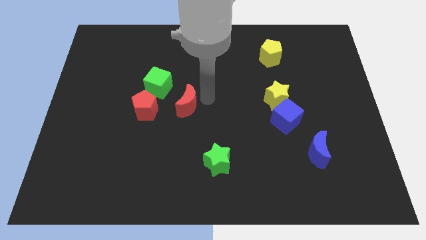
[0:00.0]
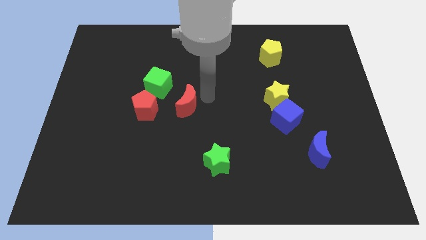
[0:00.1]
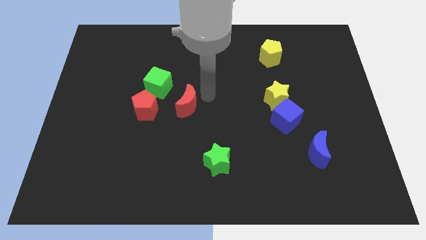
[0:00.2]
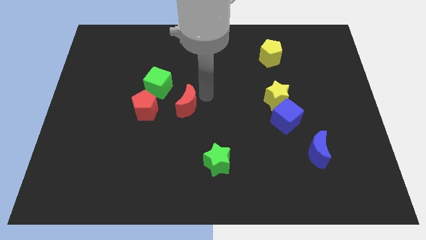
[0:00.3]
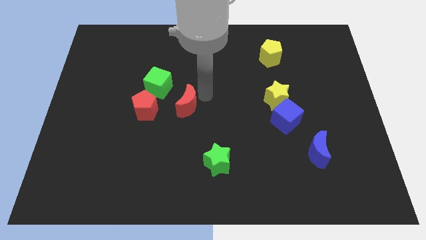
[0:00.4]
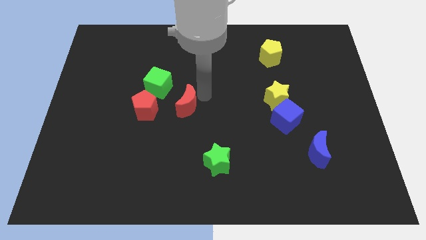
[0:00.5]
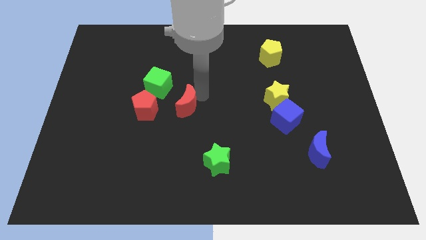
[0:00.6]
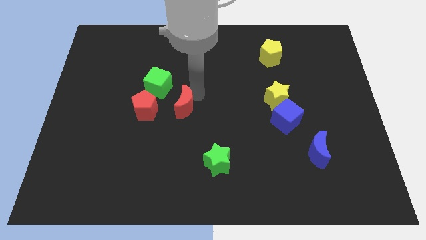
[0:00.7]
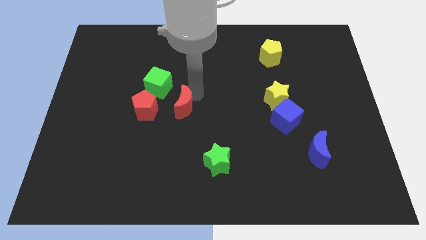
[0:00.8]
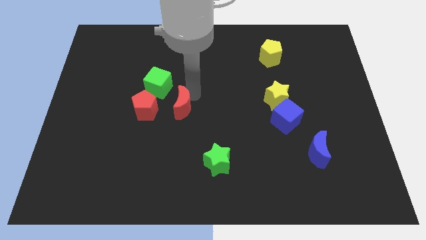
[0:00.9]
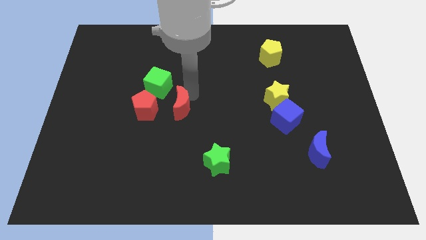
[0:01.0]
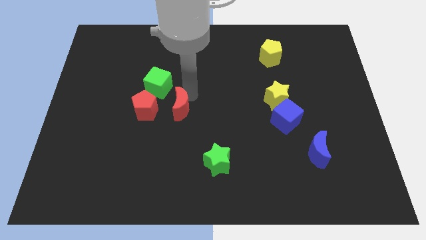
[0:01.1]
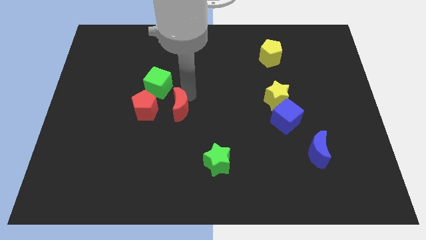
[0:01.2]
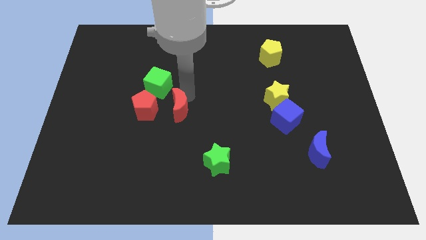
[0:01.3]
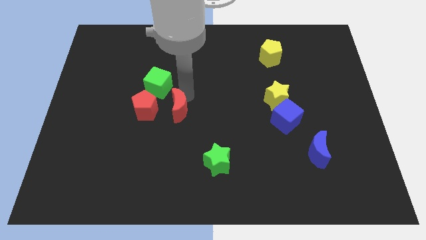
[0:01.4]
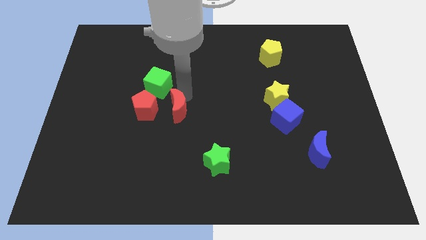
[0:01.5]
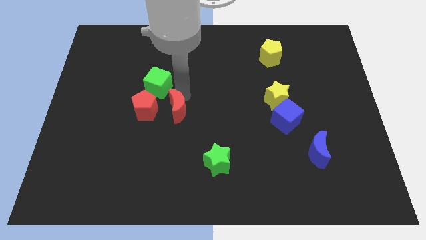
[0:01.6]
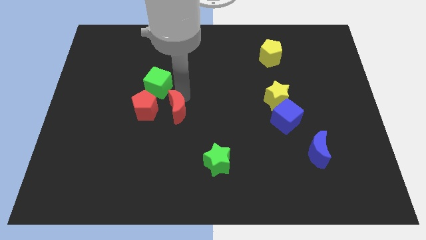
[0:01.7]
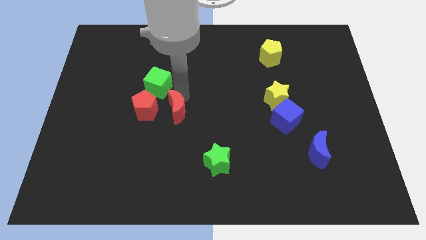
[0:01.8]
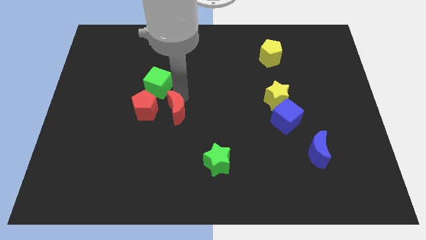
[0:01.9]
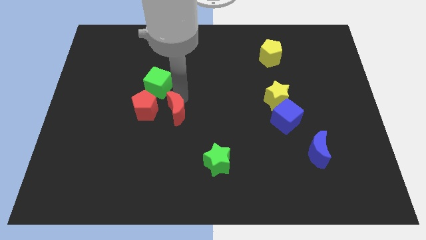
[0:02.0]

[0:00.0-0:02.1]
move the red moon near to the right side of the red pentagon

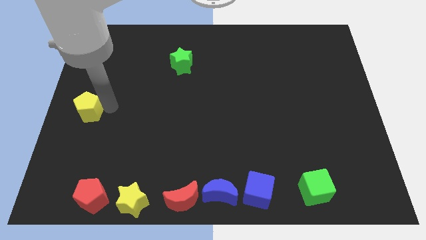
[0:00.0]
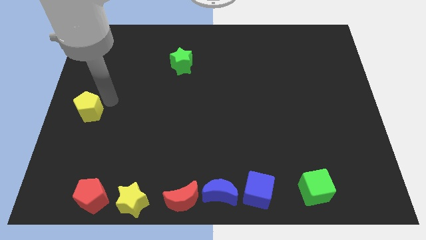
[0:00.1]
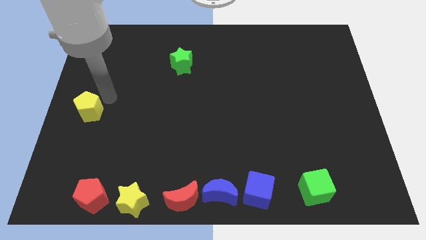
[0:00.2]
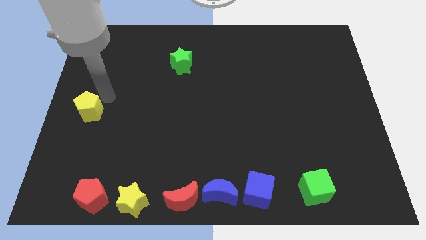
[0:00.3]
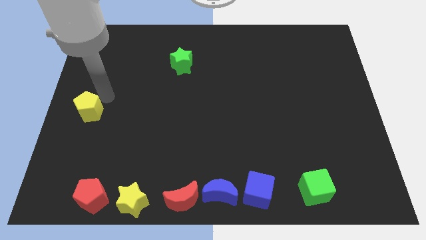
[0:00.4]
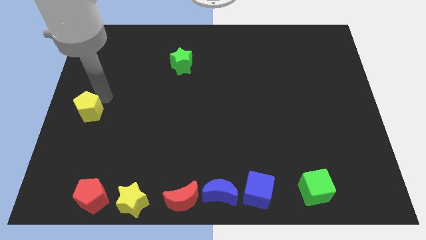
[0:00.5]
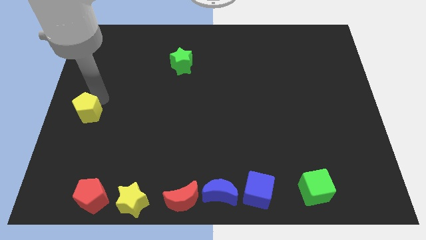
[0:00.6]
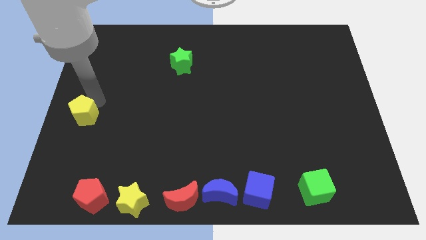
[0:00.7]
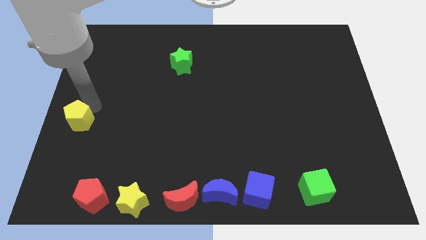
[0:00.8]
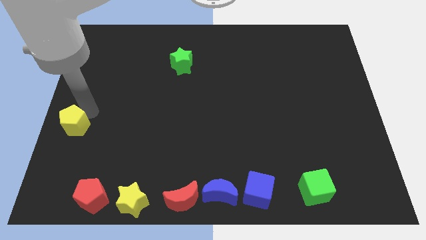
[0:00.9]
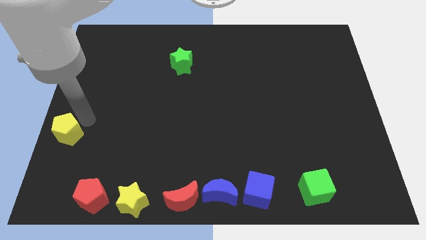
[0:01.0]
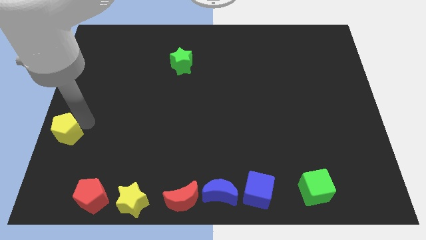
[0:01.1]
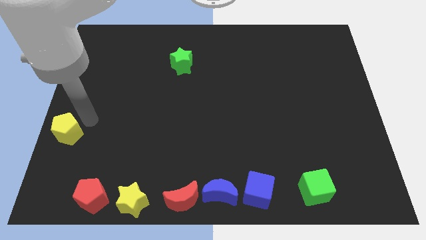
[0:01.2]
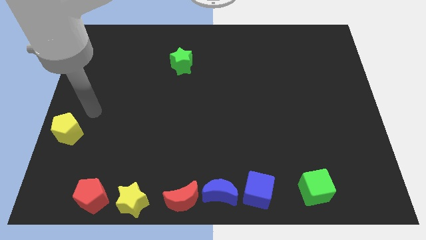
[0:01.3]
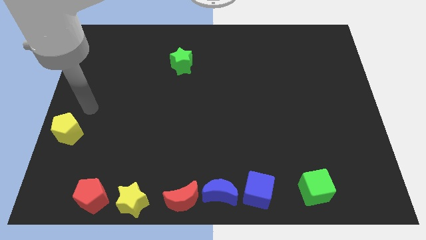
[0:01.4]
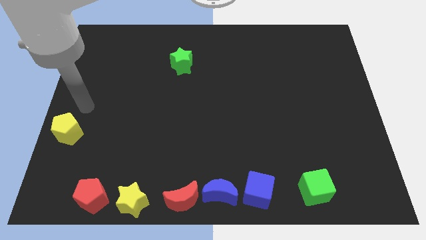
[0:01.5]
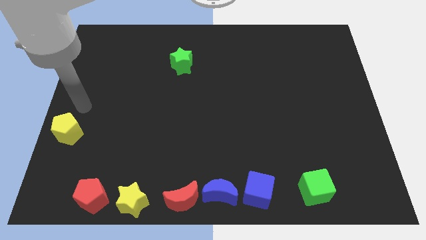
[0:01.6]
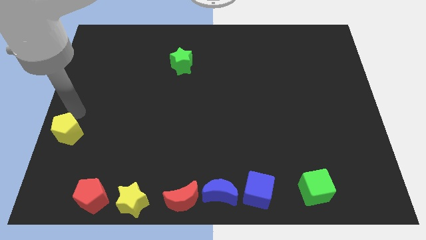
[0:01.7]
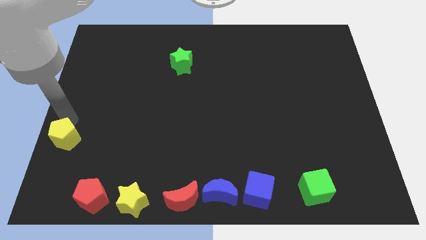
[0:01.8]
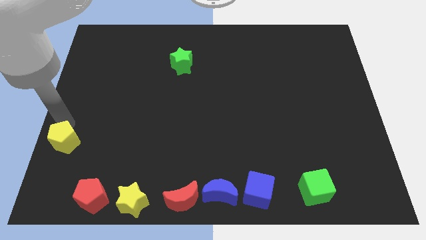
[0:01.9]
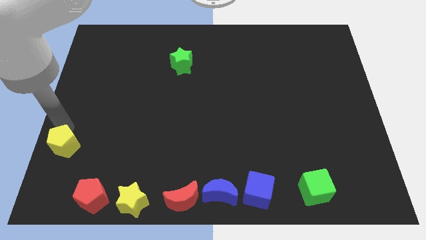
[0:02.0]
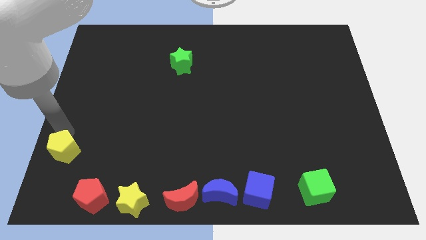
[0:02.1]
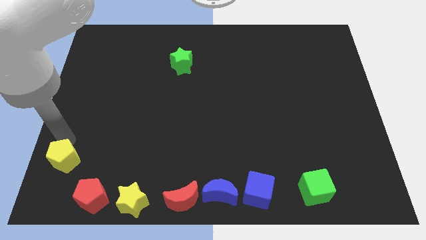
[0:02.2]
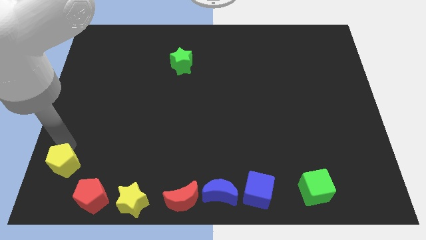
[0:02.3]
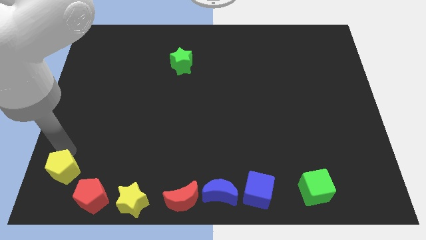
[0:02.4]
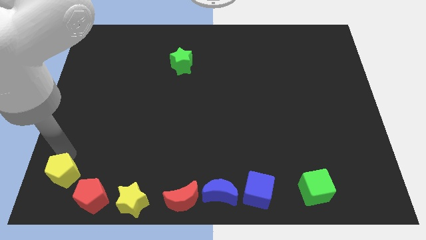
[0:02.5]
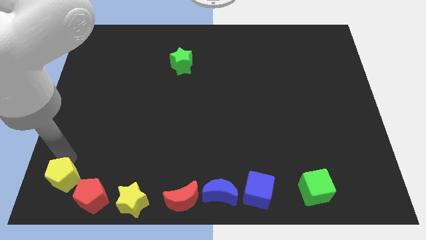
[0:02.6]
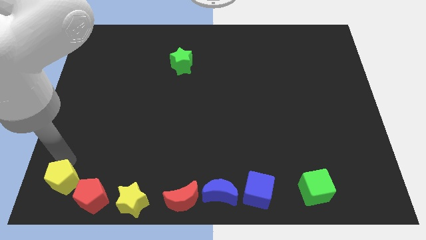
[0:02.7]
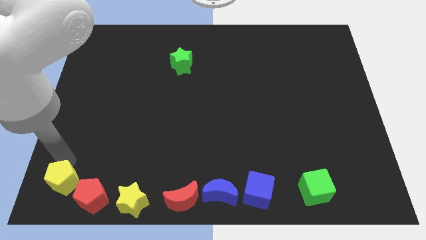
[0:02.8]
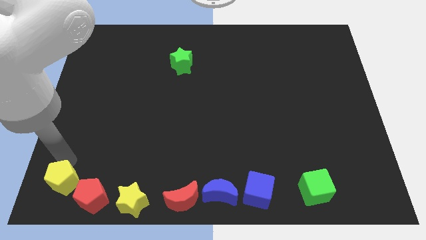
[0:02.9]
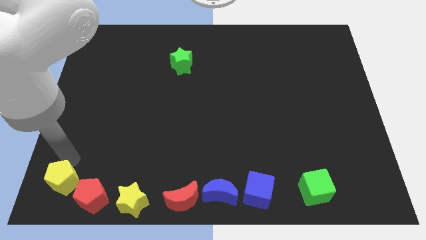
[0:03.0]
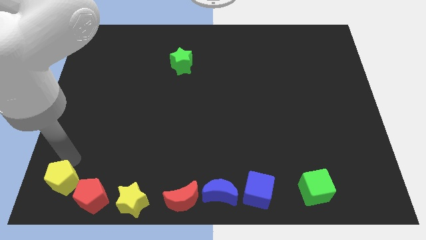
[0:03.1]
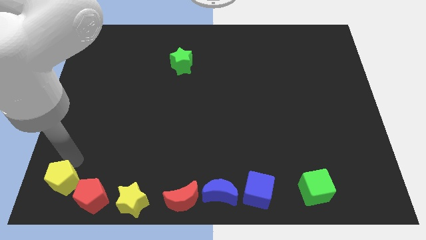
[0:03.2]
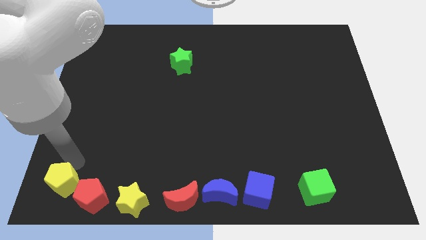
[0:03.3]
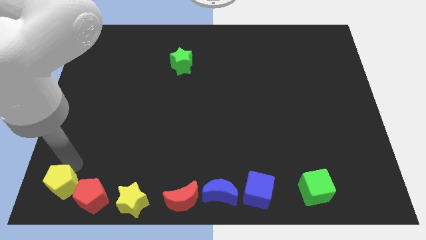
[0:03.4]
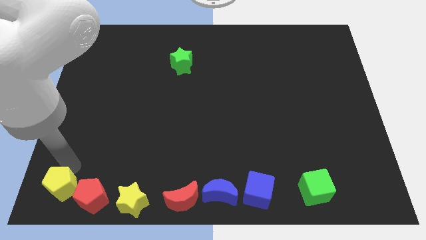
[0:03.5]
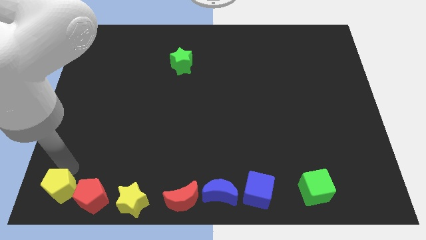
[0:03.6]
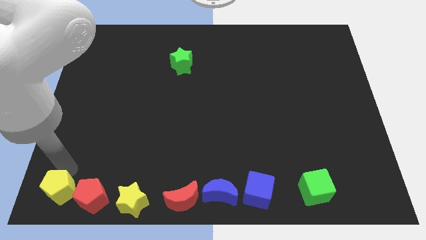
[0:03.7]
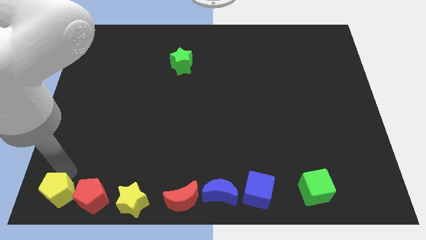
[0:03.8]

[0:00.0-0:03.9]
push the yellow pentagon to the left of the red pentagon

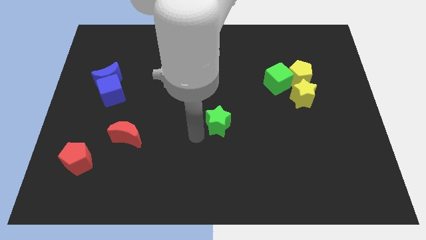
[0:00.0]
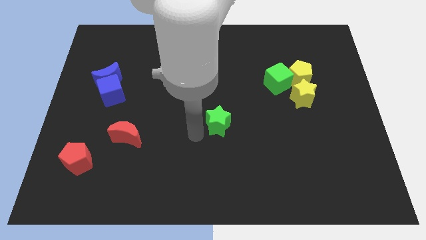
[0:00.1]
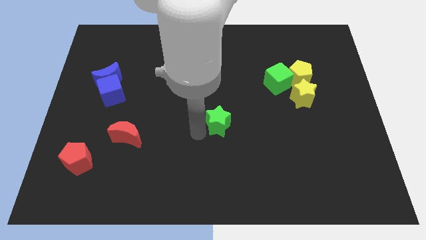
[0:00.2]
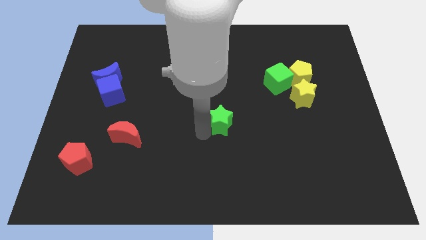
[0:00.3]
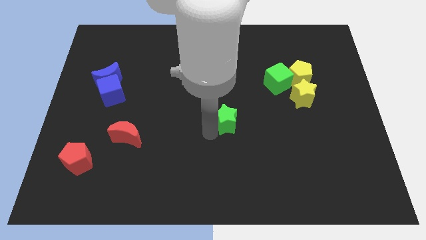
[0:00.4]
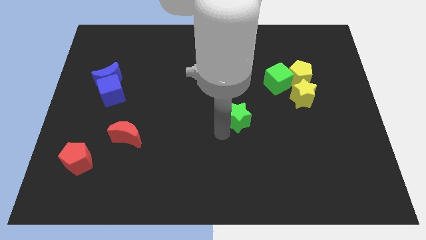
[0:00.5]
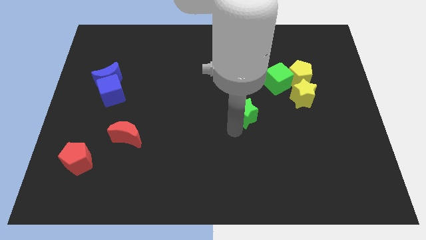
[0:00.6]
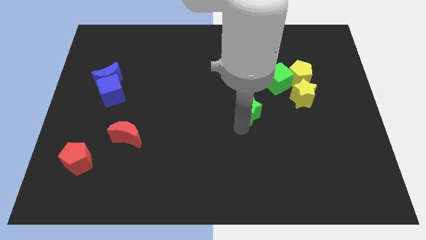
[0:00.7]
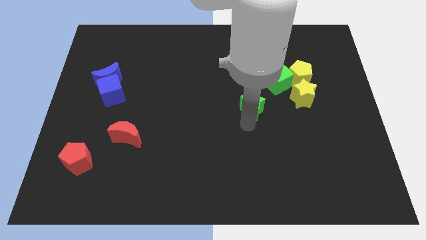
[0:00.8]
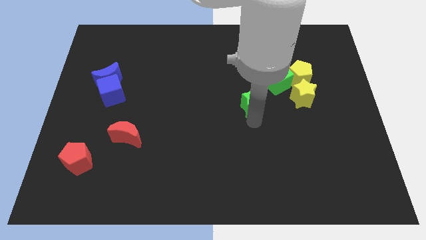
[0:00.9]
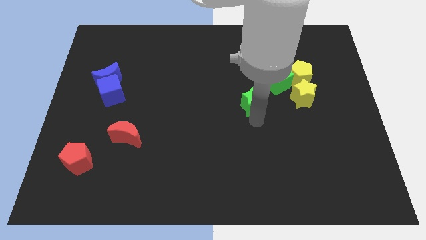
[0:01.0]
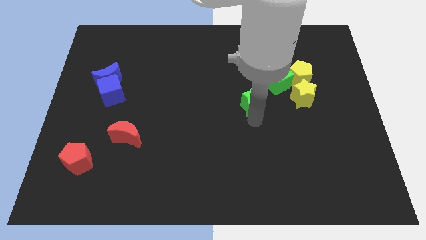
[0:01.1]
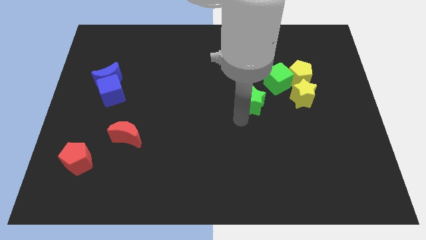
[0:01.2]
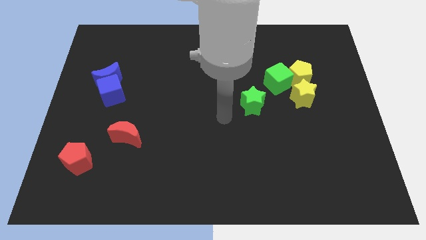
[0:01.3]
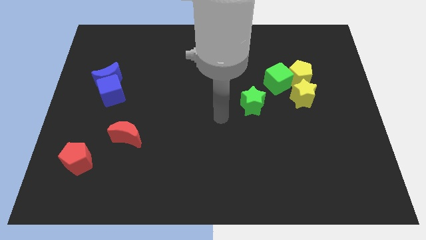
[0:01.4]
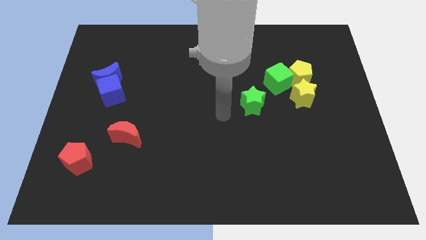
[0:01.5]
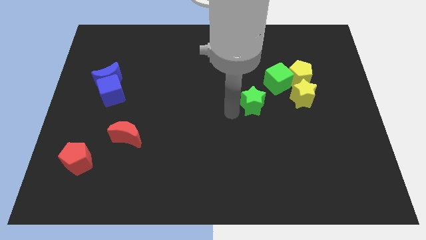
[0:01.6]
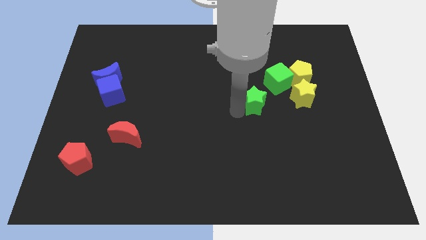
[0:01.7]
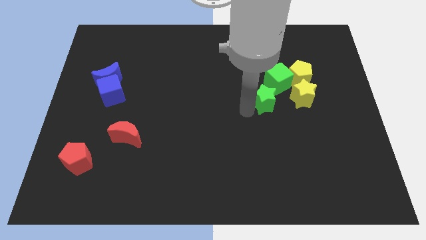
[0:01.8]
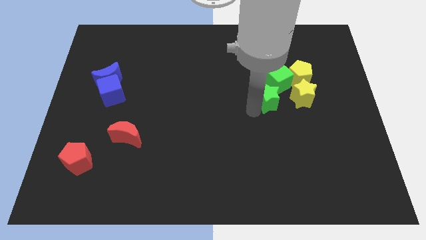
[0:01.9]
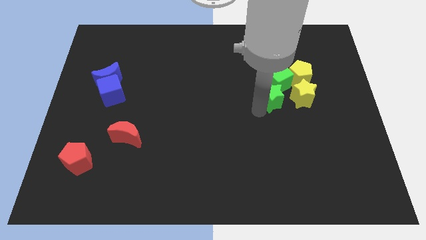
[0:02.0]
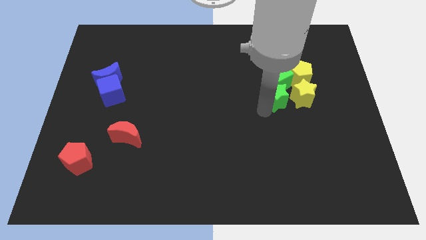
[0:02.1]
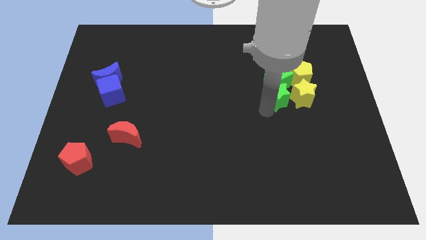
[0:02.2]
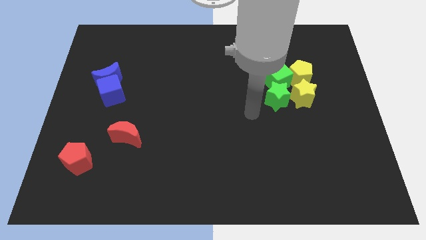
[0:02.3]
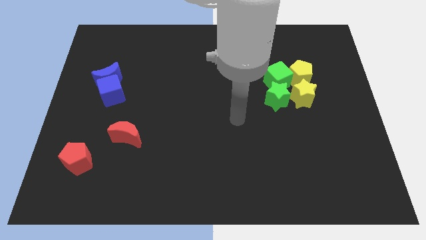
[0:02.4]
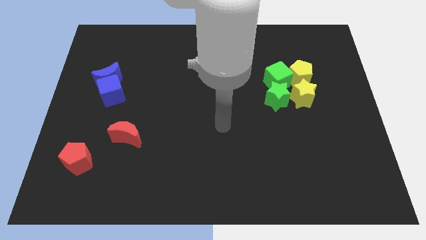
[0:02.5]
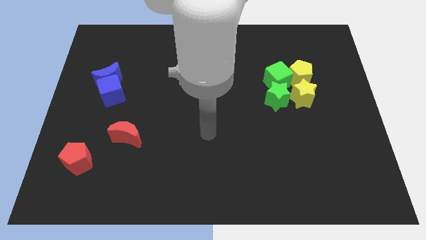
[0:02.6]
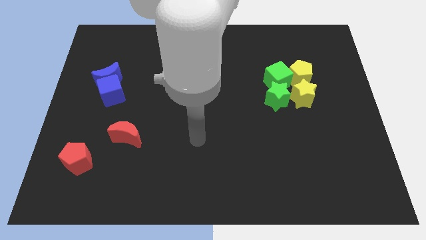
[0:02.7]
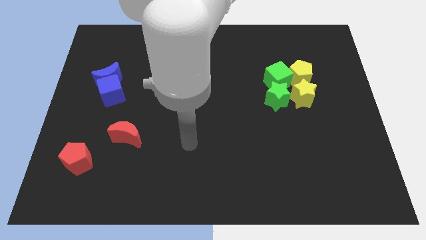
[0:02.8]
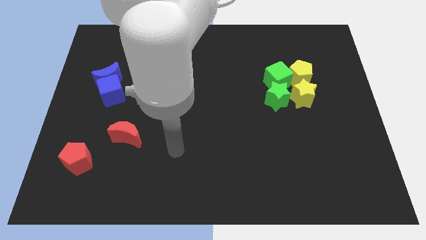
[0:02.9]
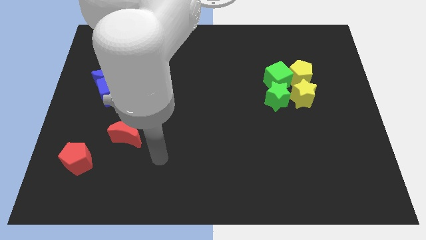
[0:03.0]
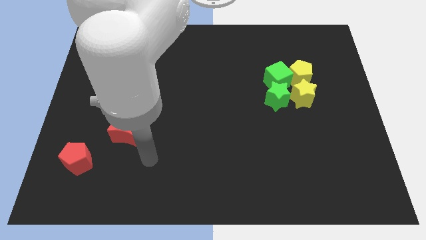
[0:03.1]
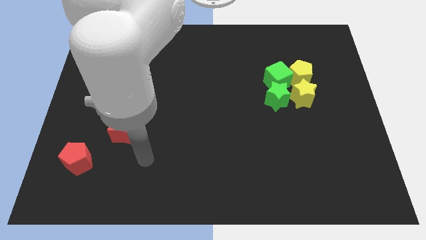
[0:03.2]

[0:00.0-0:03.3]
push the green star into the green cube
